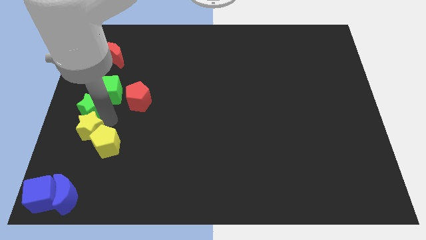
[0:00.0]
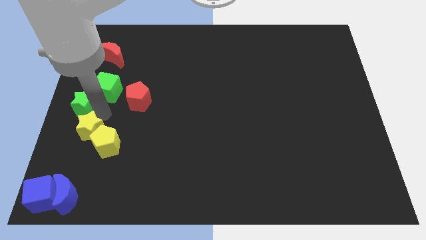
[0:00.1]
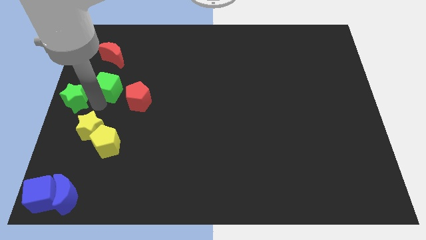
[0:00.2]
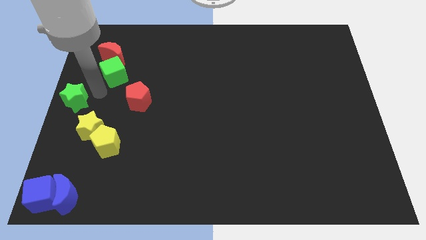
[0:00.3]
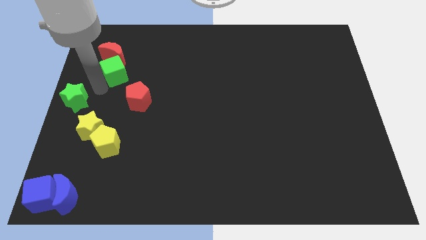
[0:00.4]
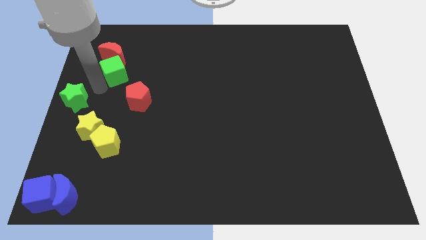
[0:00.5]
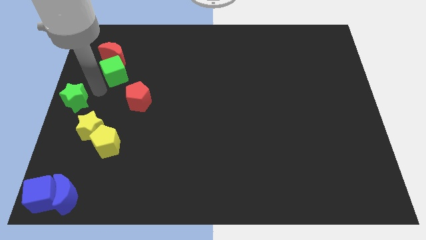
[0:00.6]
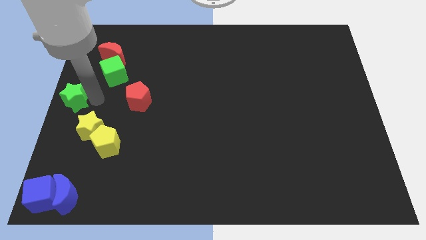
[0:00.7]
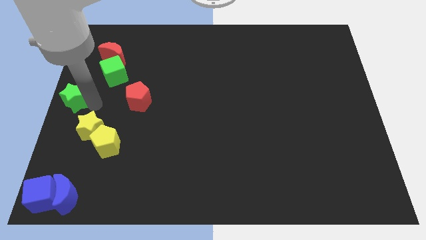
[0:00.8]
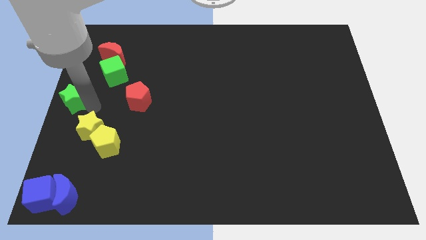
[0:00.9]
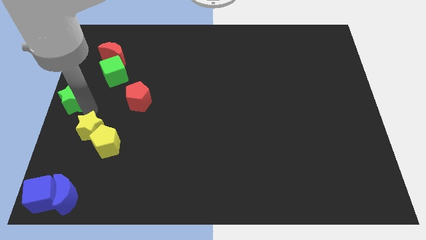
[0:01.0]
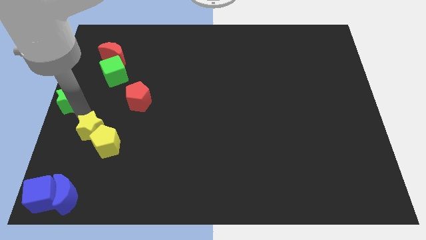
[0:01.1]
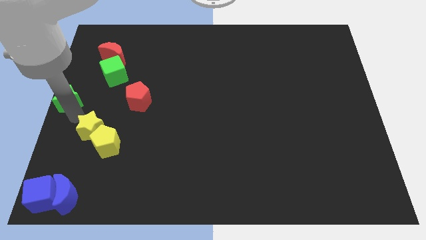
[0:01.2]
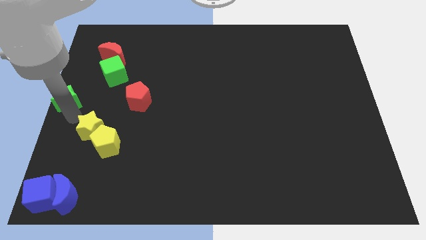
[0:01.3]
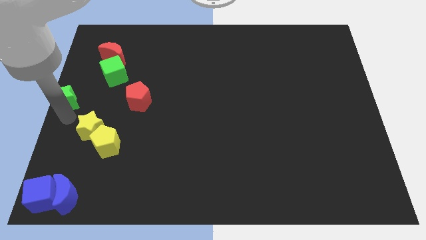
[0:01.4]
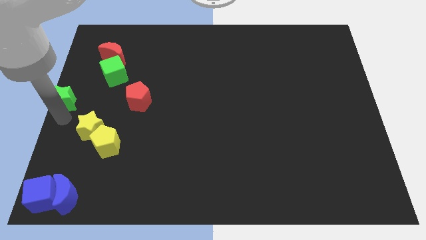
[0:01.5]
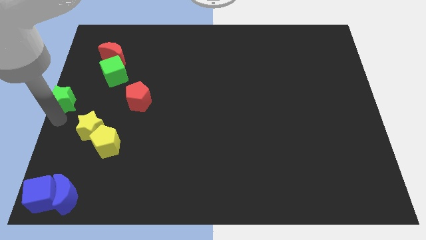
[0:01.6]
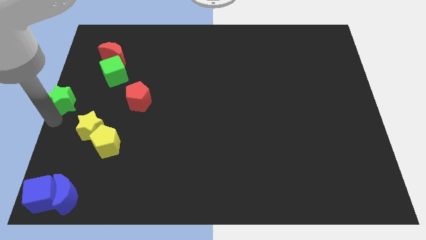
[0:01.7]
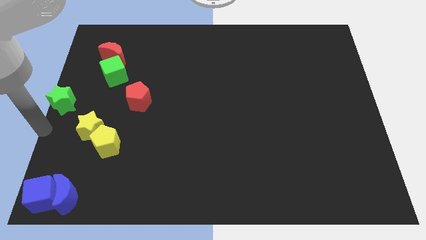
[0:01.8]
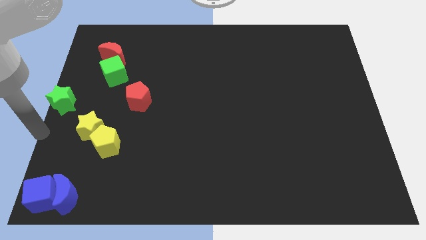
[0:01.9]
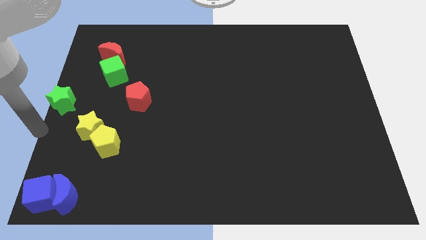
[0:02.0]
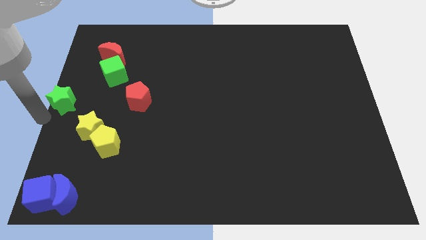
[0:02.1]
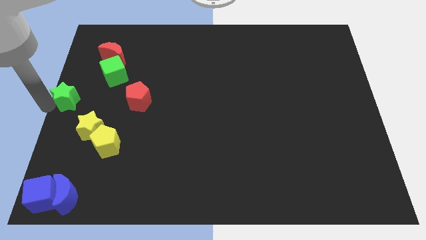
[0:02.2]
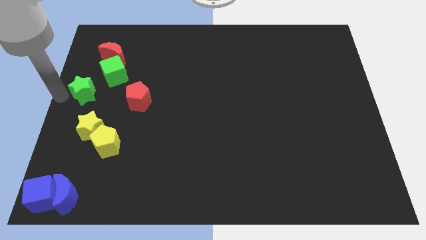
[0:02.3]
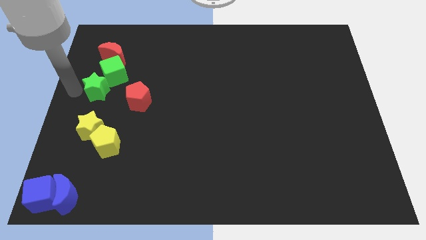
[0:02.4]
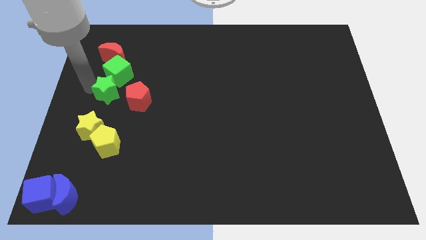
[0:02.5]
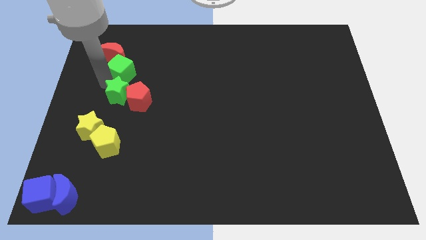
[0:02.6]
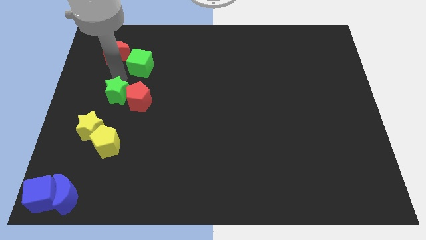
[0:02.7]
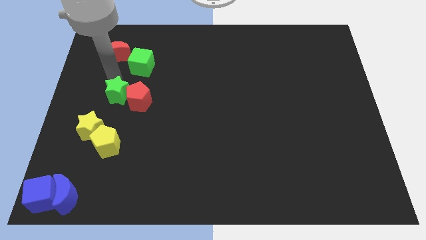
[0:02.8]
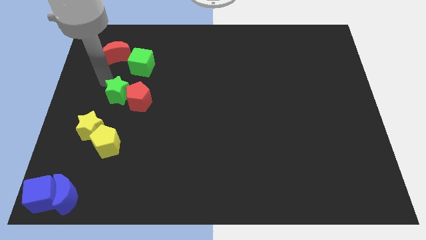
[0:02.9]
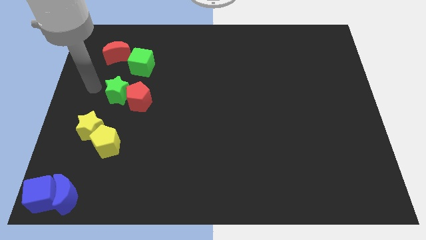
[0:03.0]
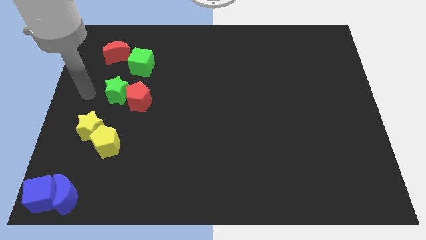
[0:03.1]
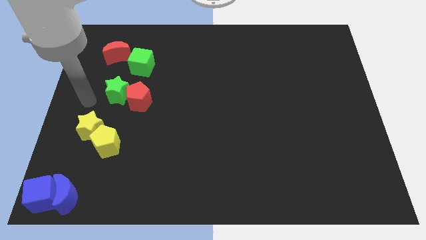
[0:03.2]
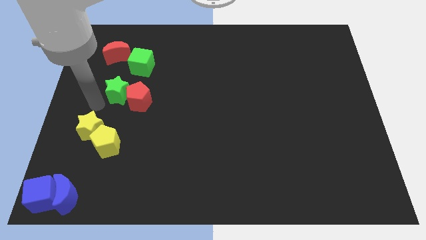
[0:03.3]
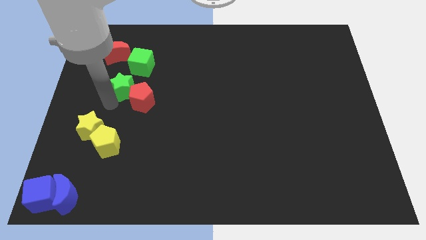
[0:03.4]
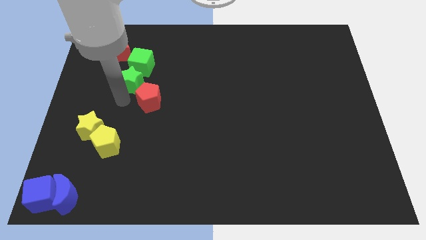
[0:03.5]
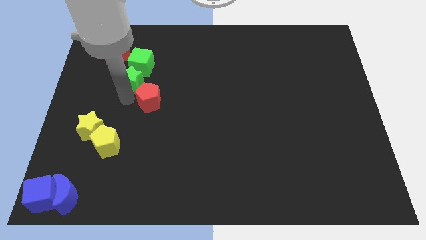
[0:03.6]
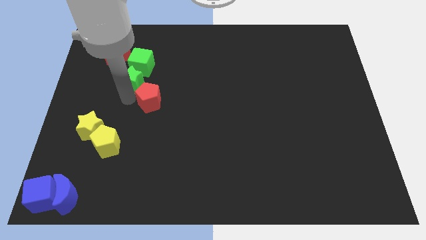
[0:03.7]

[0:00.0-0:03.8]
place the green blocks in between the red blocks

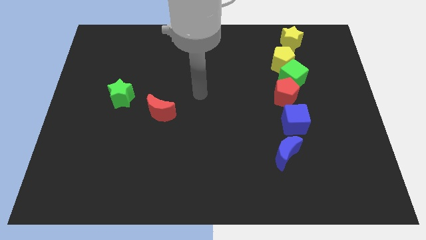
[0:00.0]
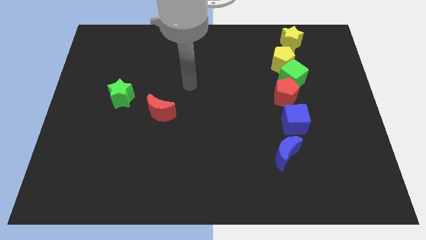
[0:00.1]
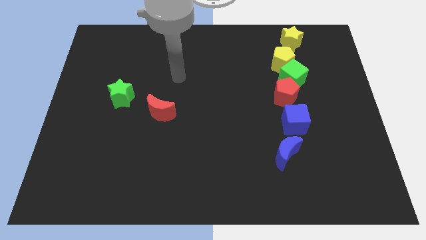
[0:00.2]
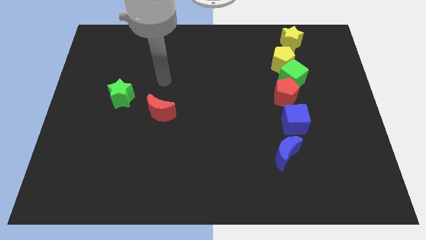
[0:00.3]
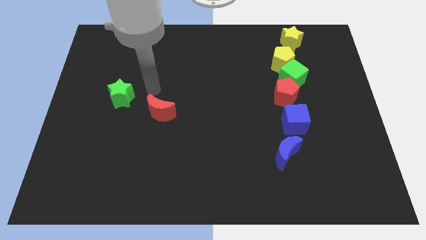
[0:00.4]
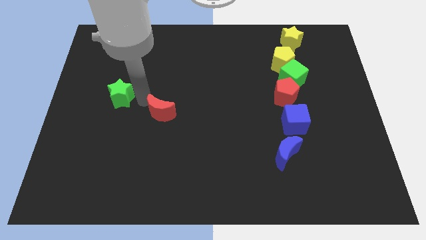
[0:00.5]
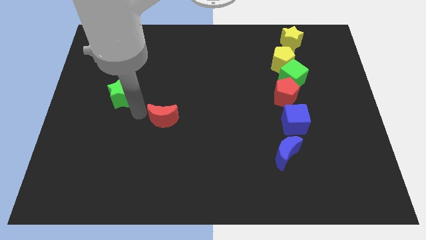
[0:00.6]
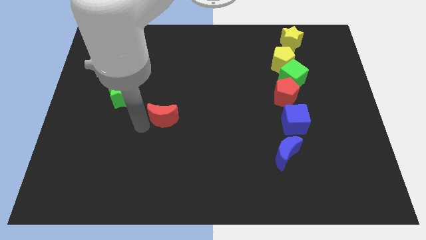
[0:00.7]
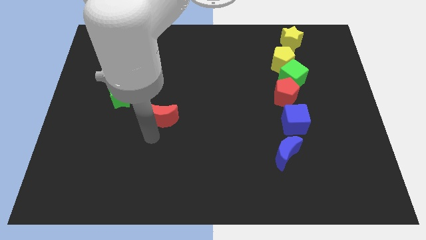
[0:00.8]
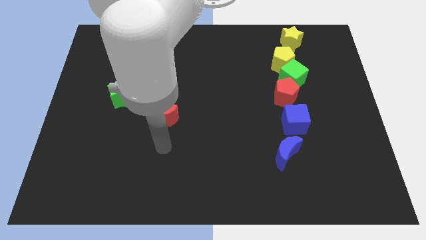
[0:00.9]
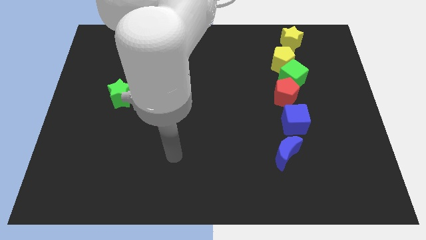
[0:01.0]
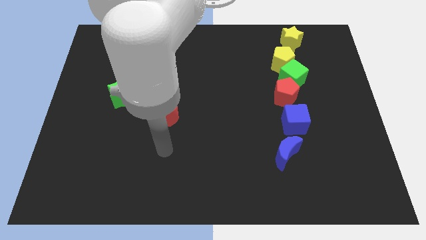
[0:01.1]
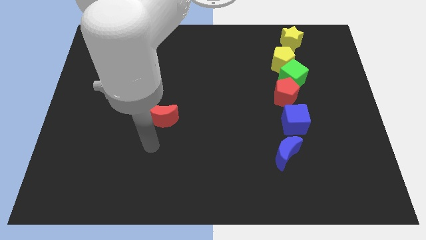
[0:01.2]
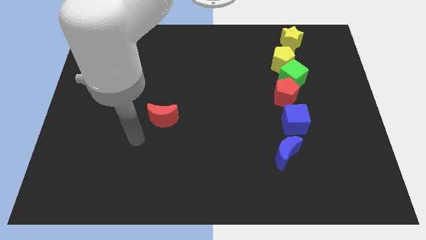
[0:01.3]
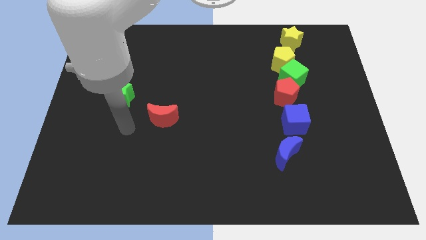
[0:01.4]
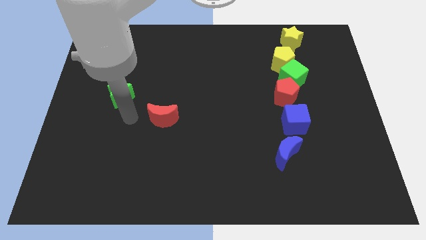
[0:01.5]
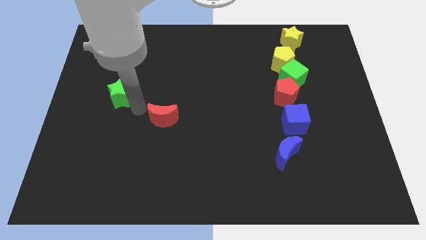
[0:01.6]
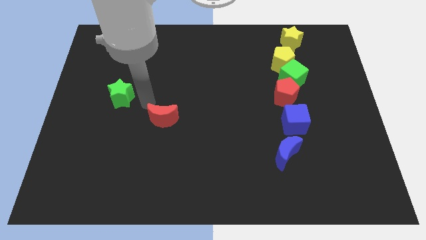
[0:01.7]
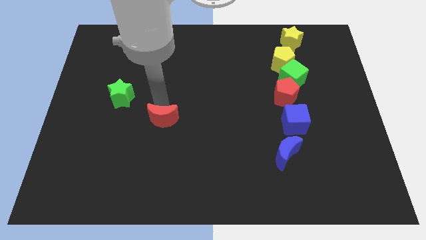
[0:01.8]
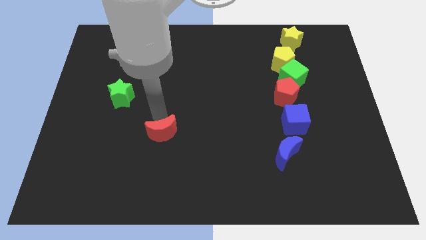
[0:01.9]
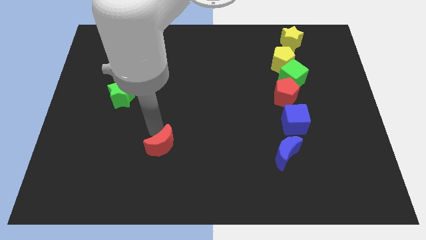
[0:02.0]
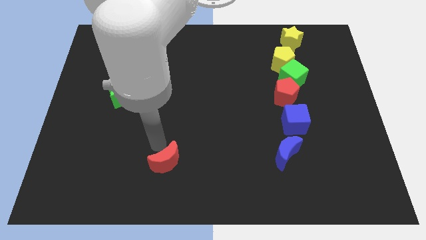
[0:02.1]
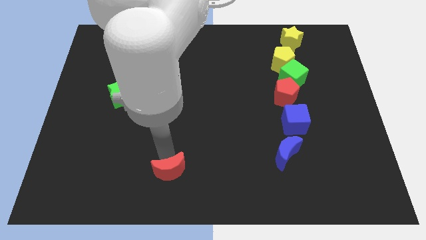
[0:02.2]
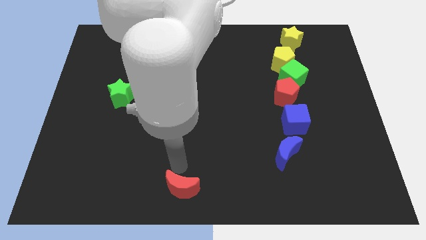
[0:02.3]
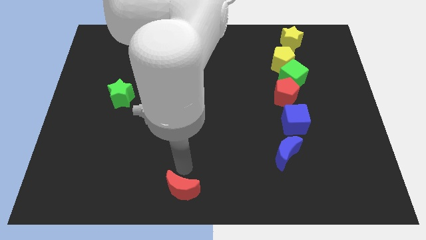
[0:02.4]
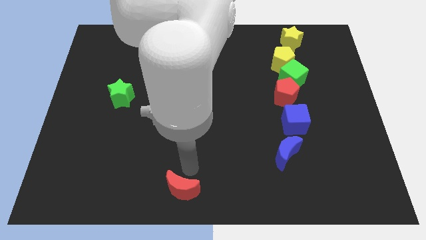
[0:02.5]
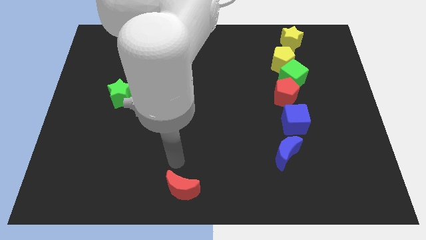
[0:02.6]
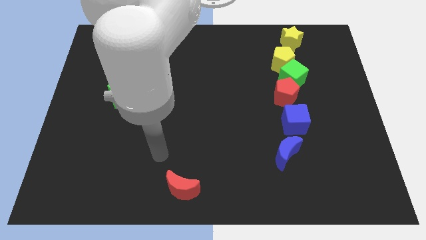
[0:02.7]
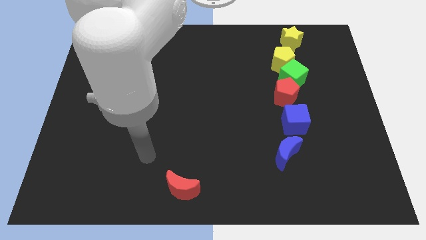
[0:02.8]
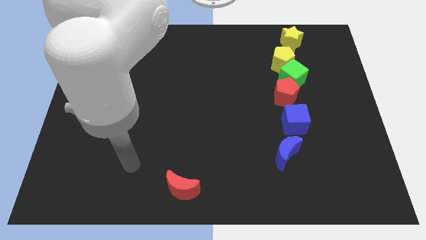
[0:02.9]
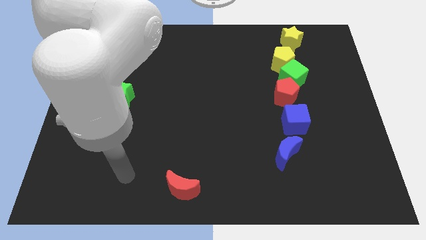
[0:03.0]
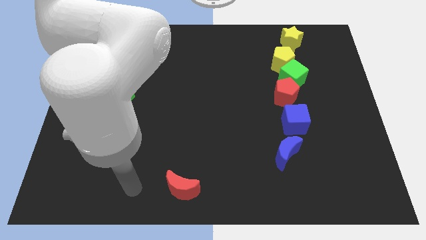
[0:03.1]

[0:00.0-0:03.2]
push the red crescent to the bottom center

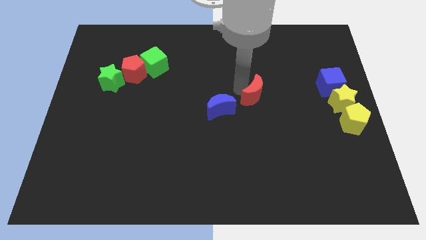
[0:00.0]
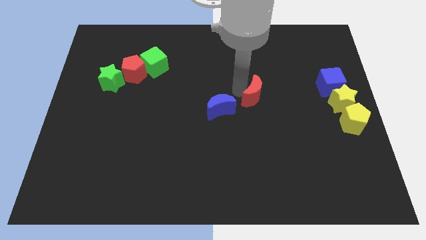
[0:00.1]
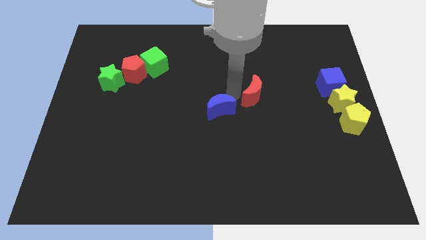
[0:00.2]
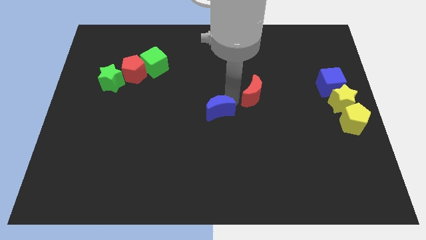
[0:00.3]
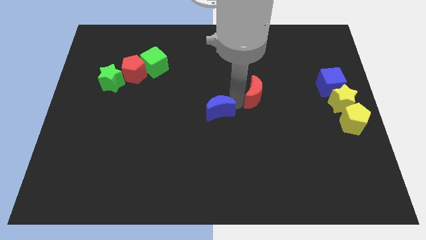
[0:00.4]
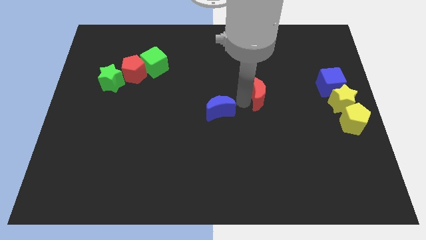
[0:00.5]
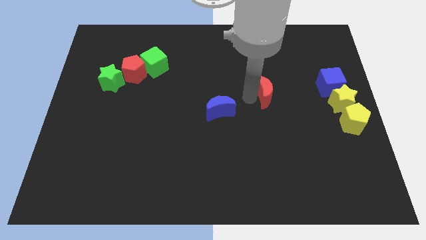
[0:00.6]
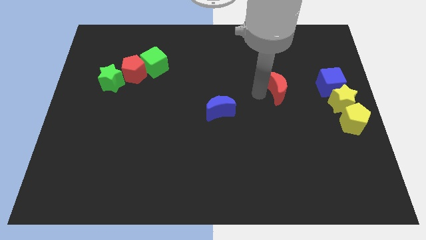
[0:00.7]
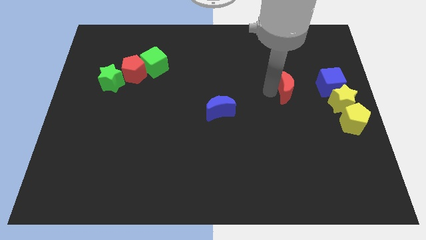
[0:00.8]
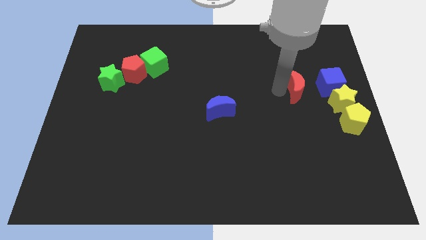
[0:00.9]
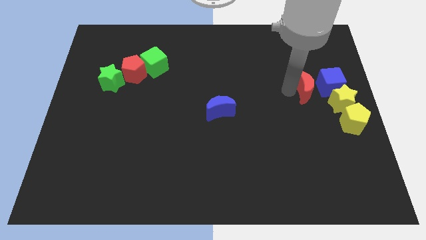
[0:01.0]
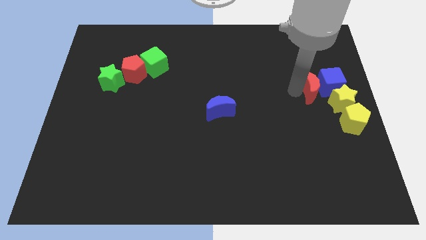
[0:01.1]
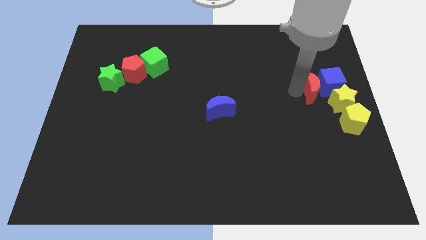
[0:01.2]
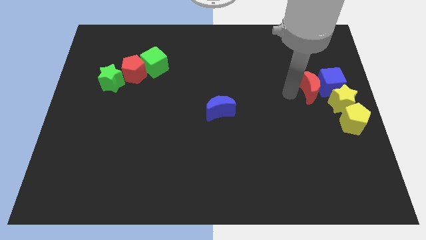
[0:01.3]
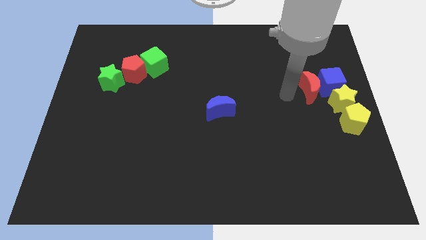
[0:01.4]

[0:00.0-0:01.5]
place the red moon left to the blue cube

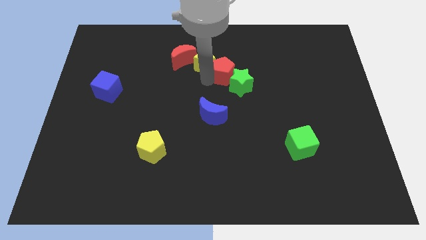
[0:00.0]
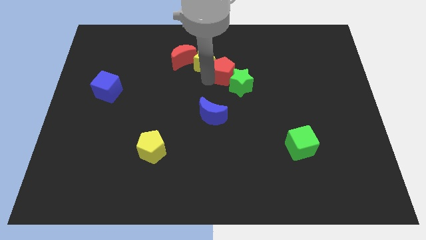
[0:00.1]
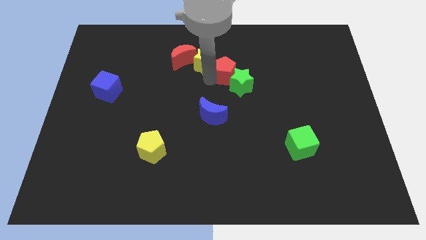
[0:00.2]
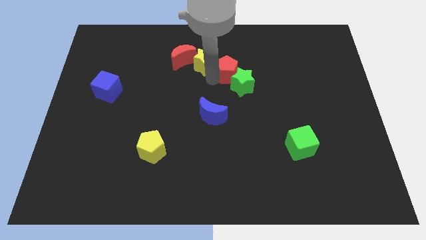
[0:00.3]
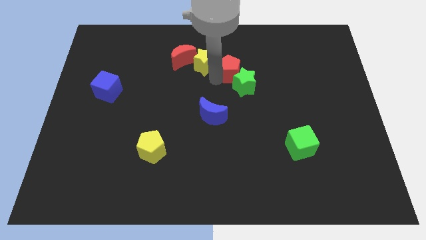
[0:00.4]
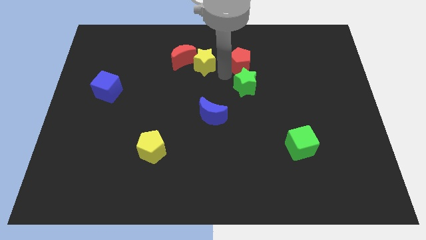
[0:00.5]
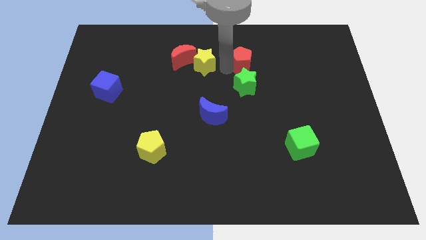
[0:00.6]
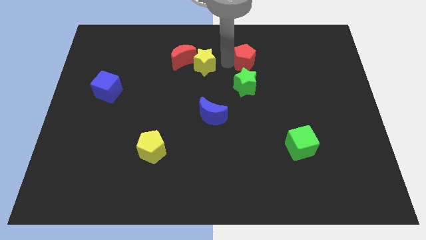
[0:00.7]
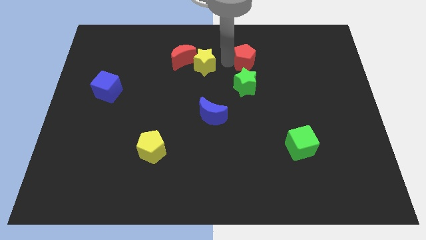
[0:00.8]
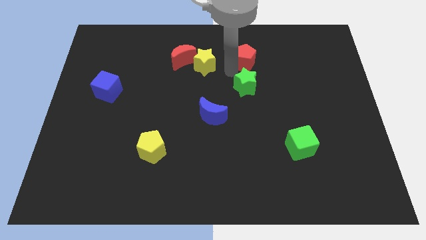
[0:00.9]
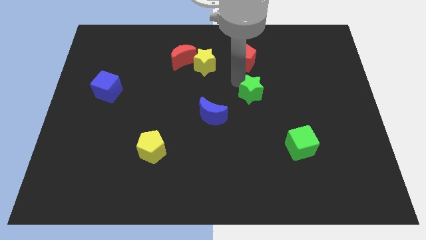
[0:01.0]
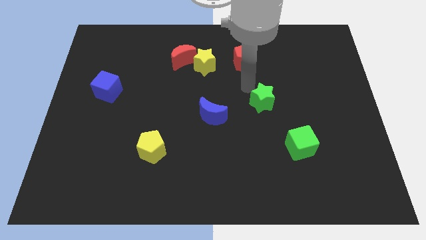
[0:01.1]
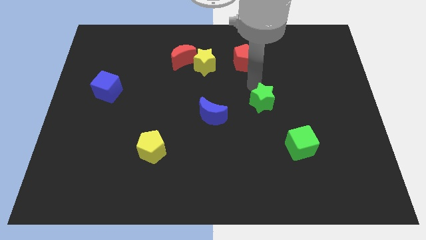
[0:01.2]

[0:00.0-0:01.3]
separate the red pentagon and green star
